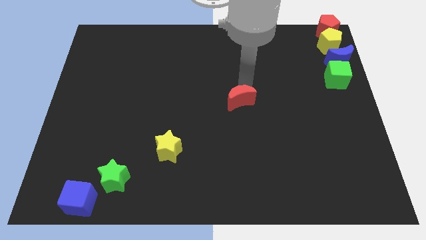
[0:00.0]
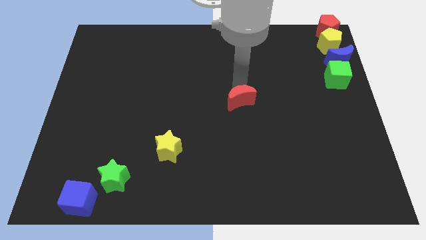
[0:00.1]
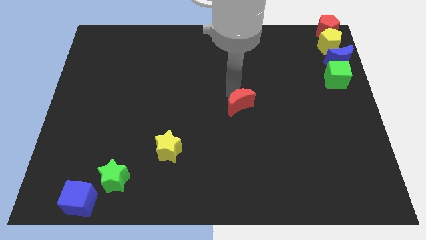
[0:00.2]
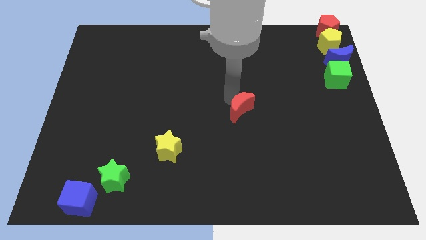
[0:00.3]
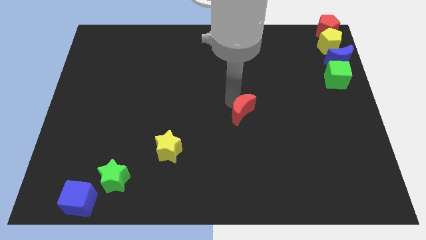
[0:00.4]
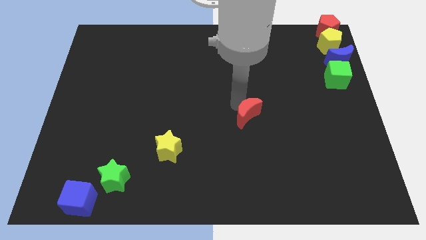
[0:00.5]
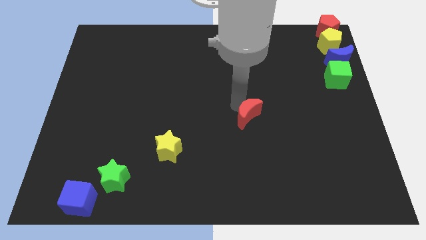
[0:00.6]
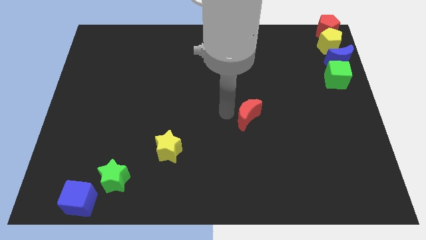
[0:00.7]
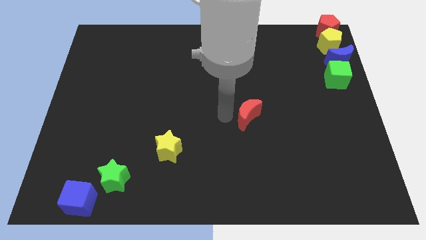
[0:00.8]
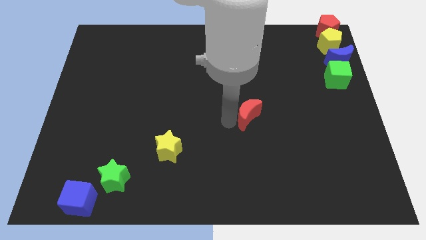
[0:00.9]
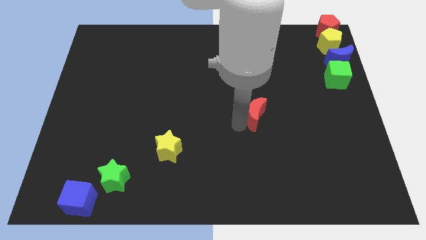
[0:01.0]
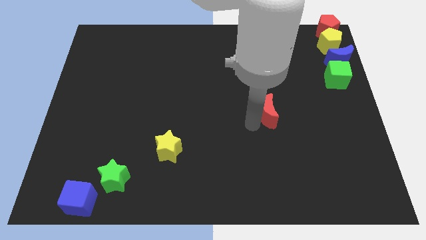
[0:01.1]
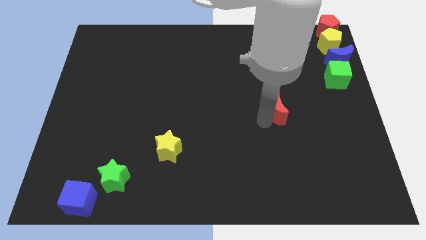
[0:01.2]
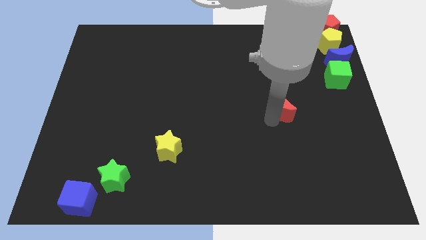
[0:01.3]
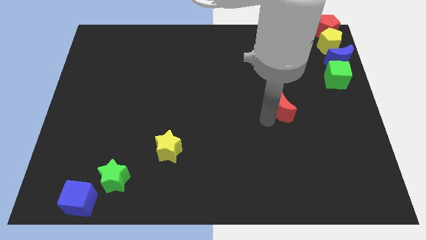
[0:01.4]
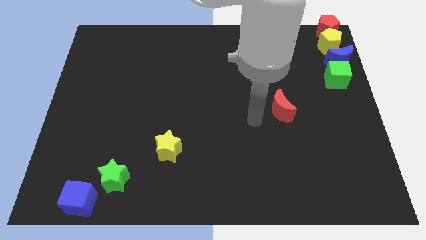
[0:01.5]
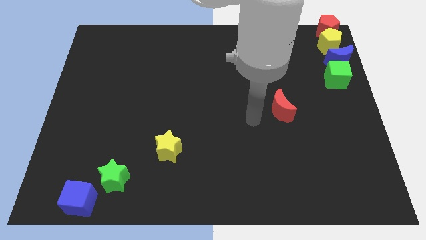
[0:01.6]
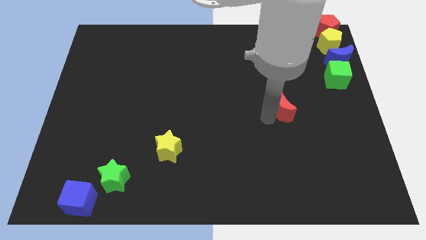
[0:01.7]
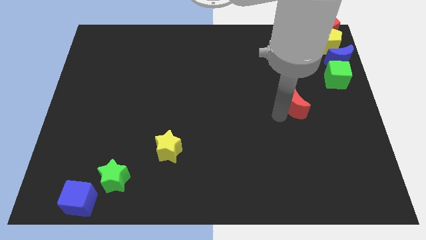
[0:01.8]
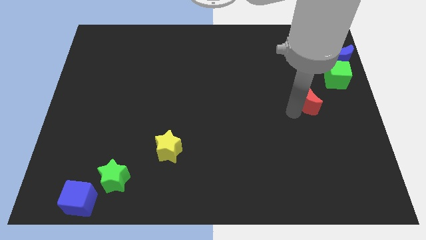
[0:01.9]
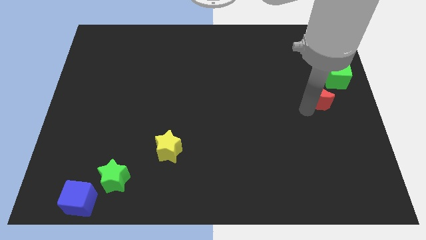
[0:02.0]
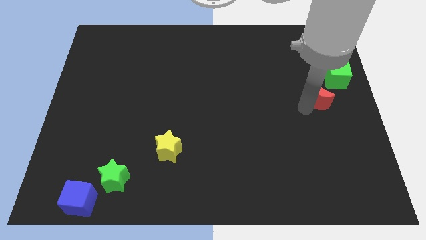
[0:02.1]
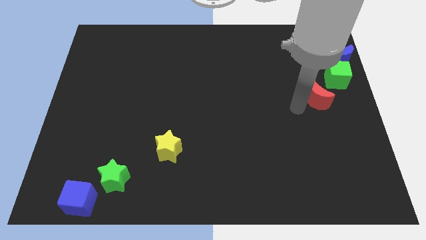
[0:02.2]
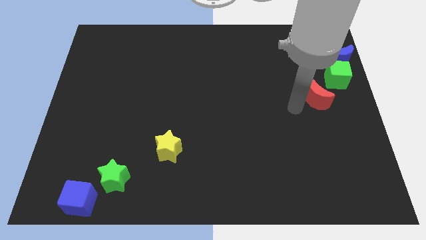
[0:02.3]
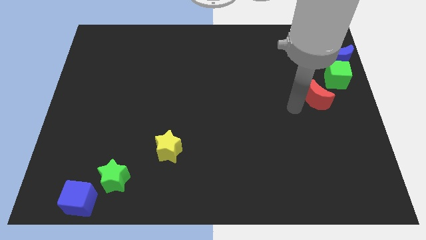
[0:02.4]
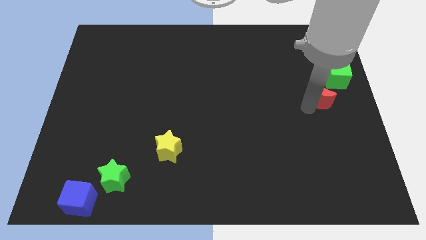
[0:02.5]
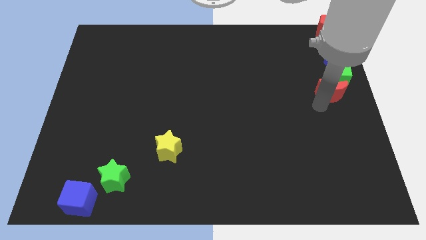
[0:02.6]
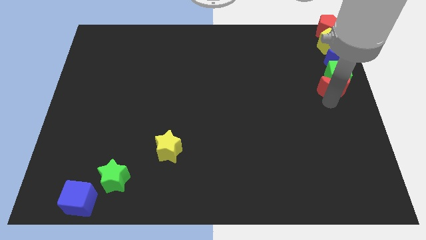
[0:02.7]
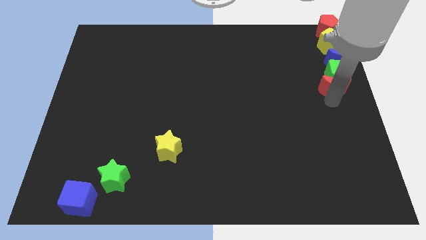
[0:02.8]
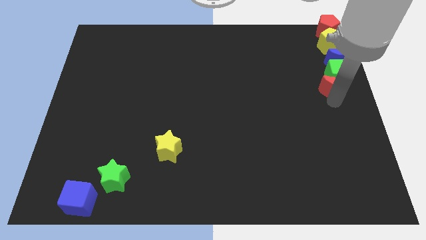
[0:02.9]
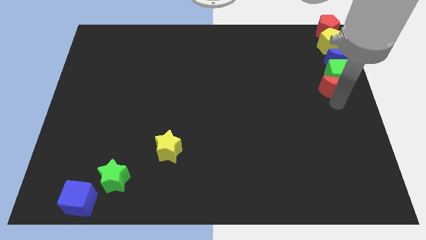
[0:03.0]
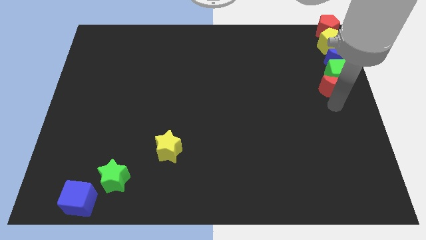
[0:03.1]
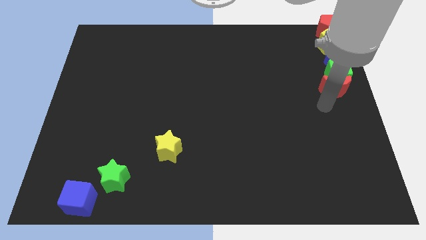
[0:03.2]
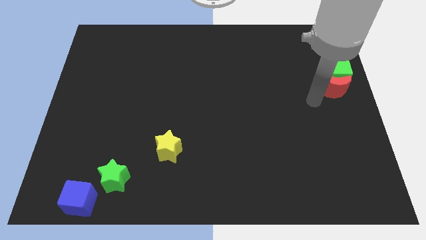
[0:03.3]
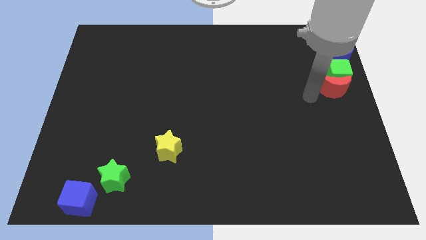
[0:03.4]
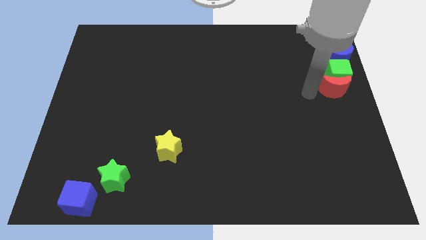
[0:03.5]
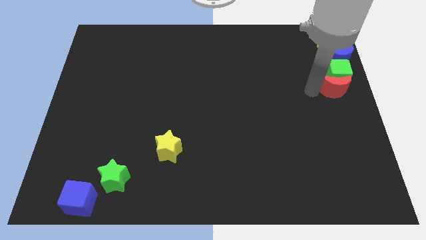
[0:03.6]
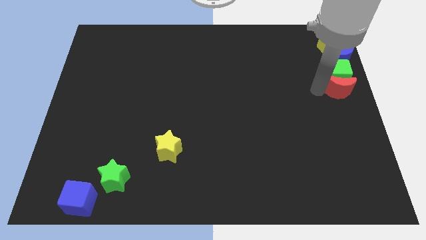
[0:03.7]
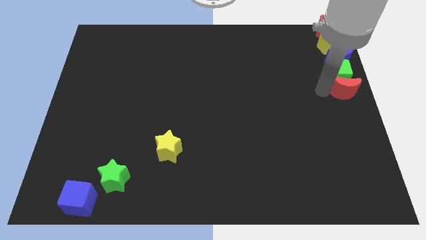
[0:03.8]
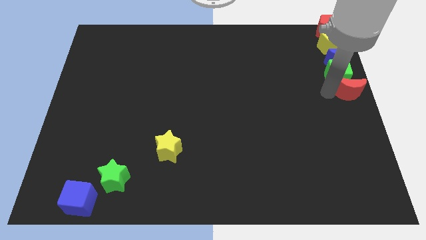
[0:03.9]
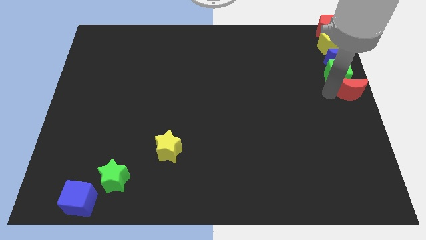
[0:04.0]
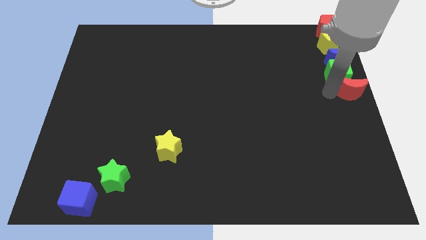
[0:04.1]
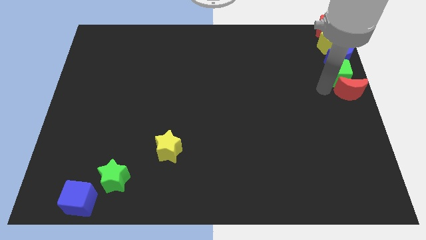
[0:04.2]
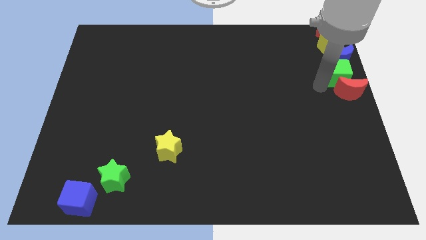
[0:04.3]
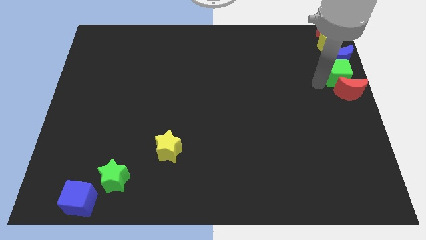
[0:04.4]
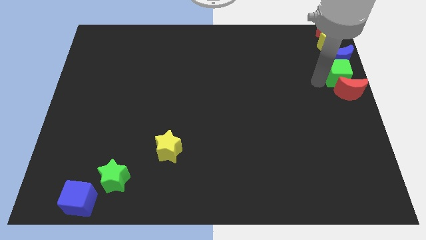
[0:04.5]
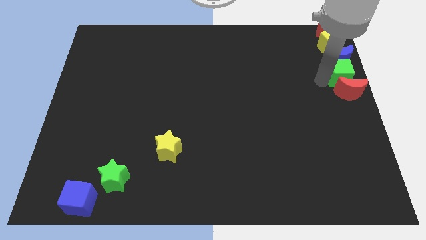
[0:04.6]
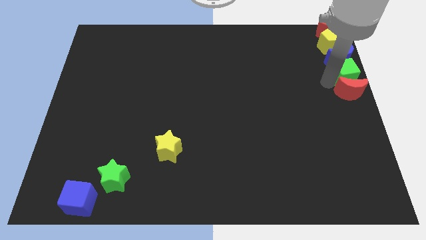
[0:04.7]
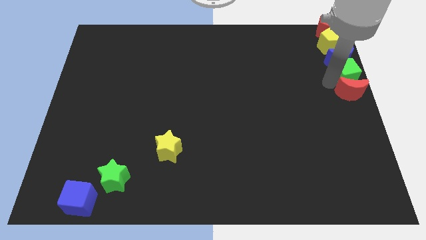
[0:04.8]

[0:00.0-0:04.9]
push the red crescent towards the green cube

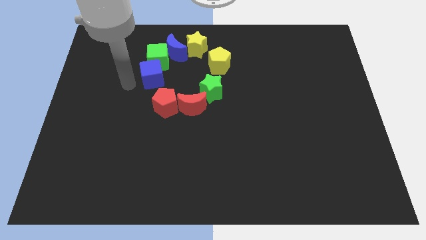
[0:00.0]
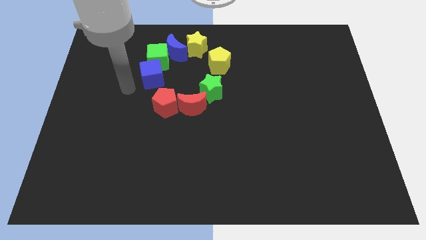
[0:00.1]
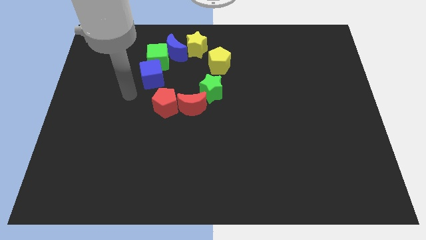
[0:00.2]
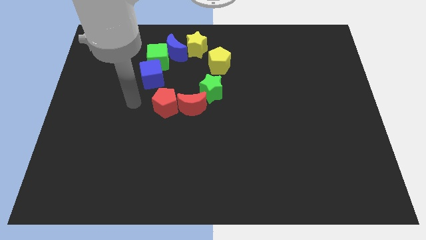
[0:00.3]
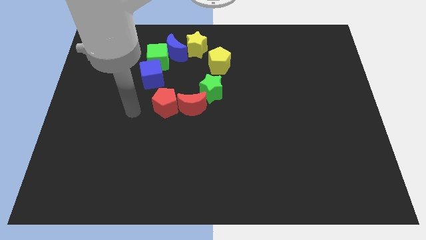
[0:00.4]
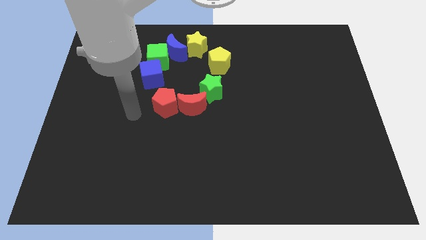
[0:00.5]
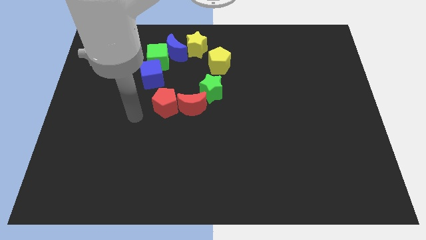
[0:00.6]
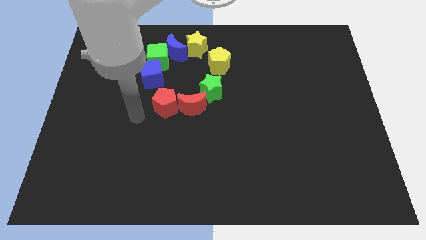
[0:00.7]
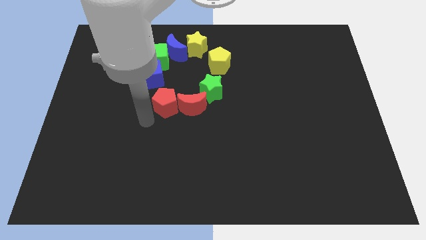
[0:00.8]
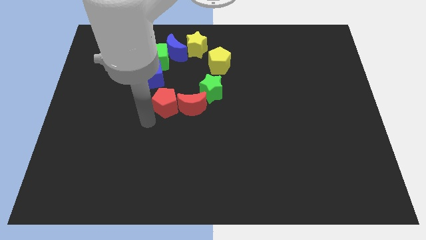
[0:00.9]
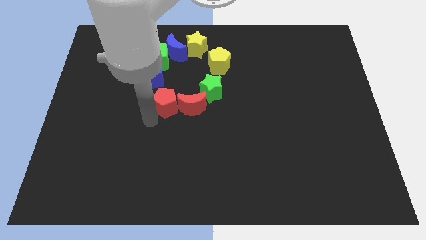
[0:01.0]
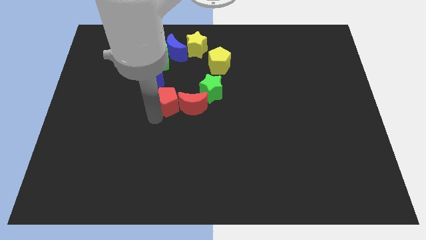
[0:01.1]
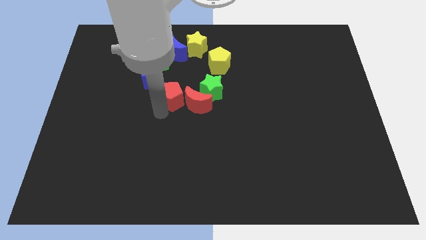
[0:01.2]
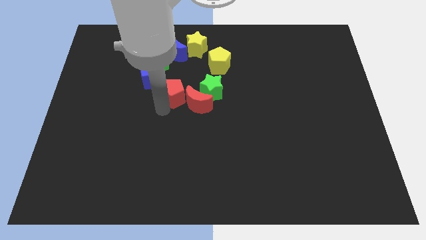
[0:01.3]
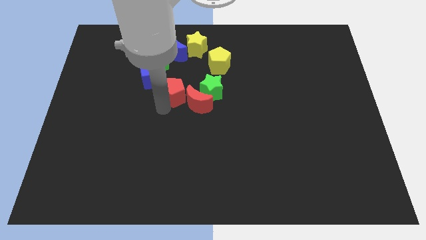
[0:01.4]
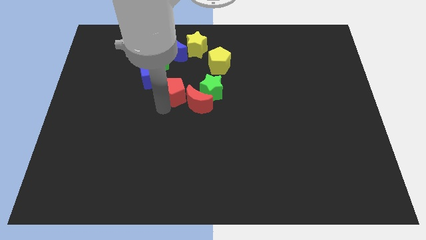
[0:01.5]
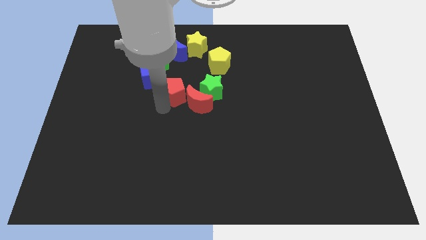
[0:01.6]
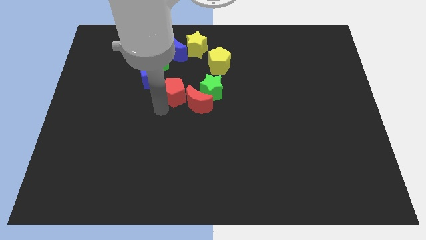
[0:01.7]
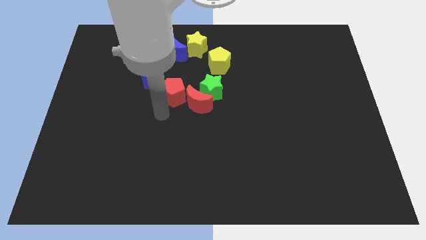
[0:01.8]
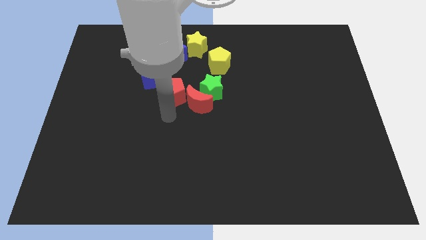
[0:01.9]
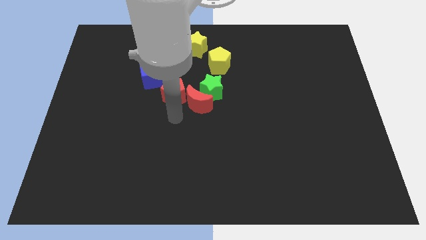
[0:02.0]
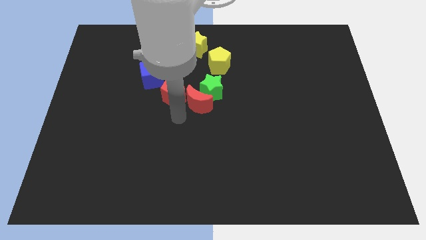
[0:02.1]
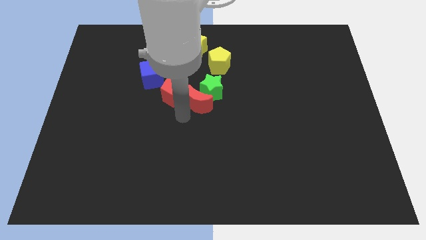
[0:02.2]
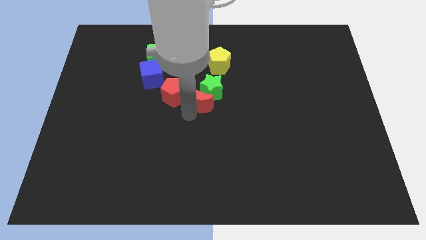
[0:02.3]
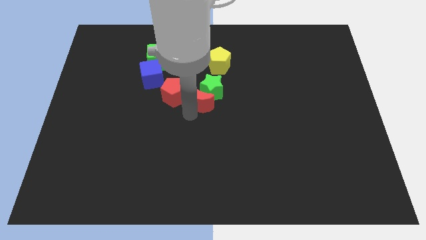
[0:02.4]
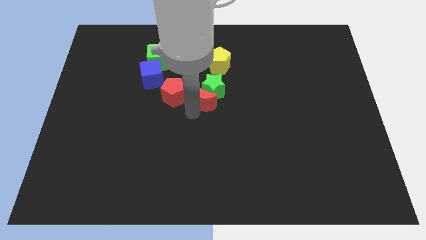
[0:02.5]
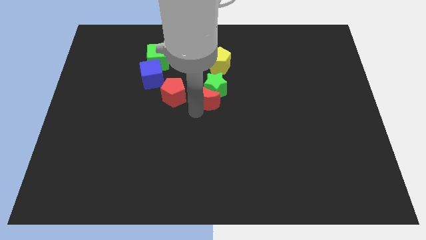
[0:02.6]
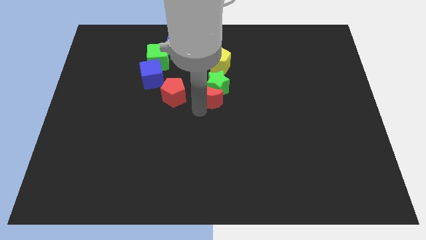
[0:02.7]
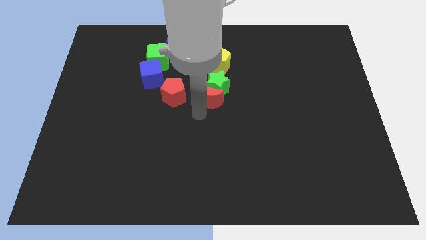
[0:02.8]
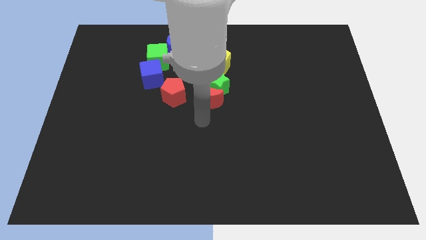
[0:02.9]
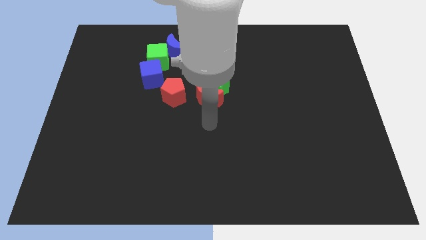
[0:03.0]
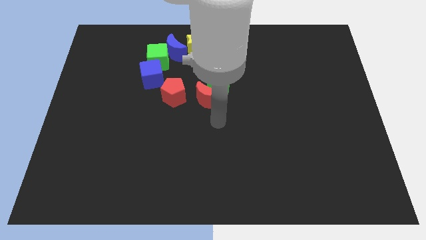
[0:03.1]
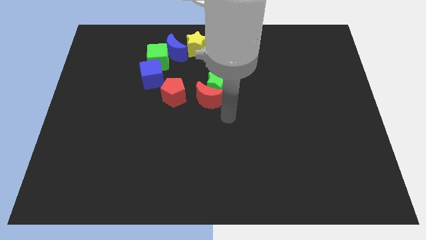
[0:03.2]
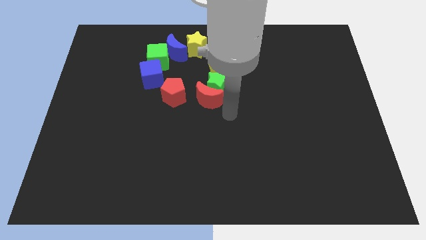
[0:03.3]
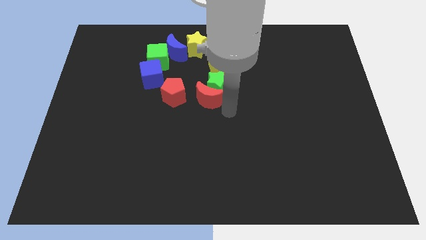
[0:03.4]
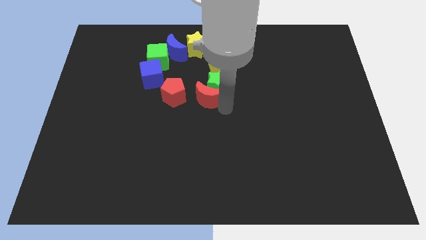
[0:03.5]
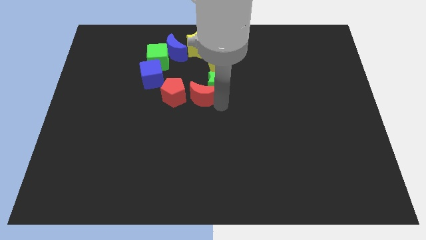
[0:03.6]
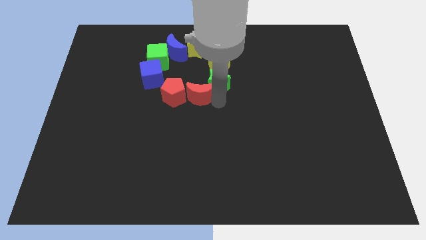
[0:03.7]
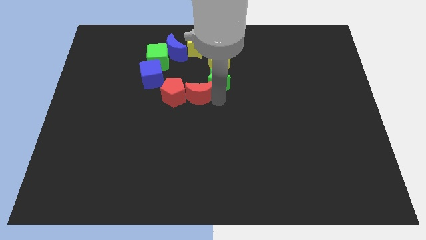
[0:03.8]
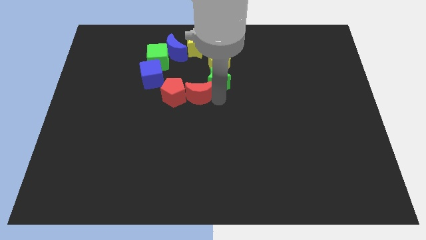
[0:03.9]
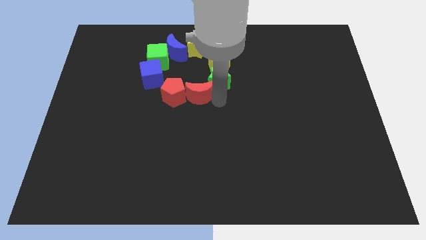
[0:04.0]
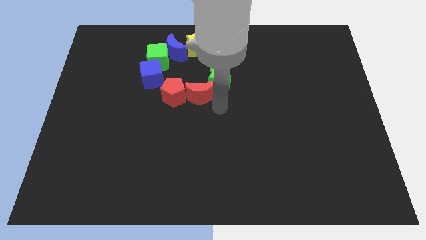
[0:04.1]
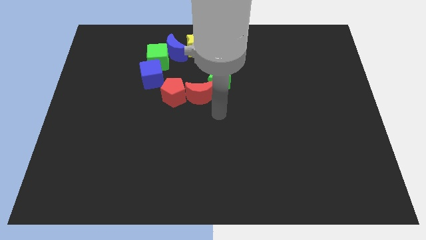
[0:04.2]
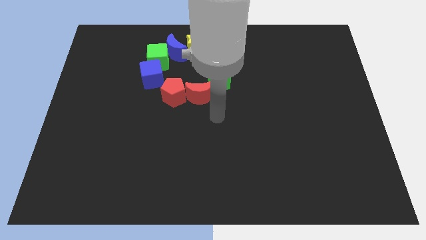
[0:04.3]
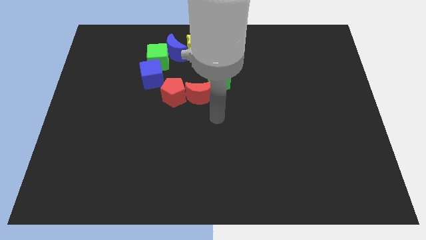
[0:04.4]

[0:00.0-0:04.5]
push the red pentagon and red moon upwards together to form a circle with the group of blocks
